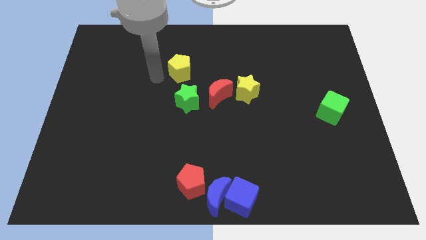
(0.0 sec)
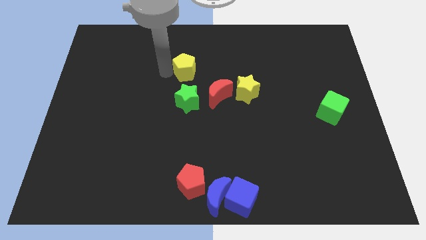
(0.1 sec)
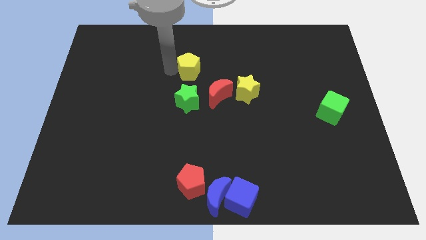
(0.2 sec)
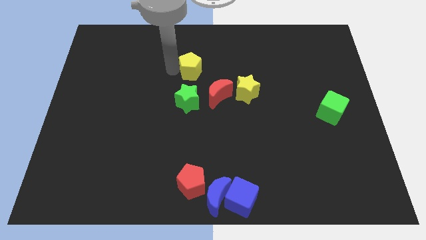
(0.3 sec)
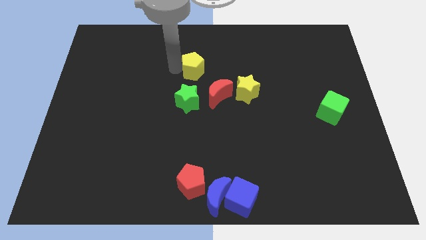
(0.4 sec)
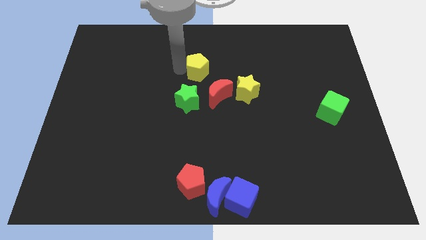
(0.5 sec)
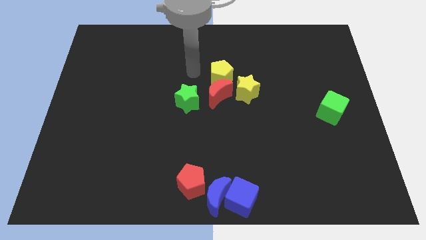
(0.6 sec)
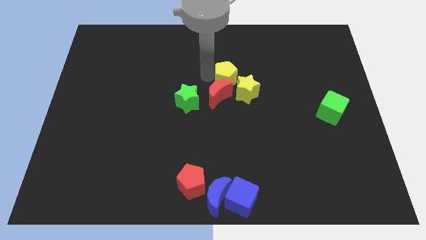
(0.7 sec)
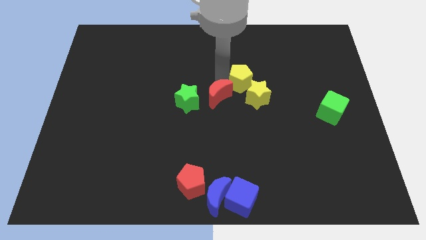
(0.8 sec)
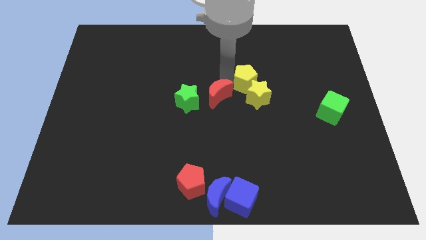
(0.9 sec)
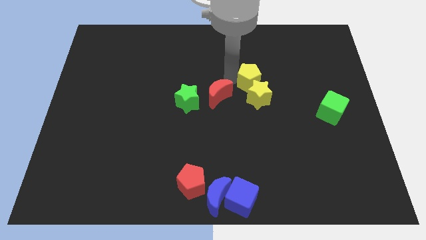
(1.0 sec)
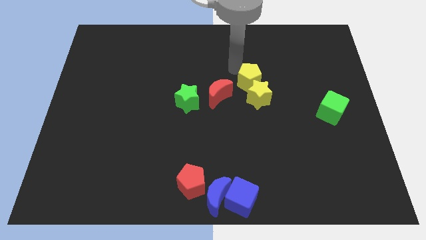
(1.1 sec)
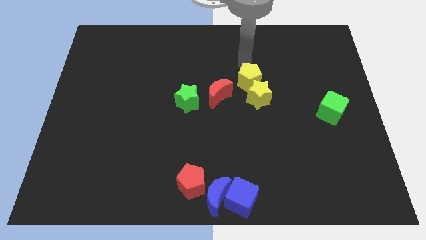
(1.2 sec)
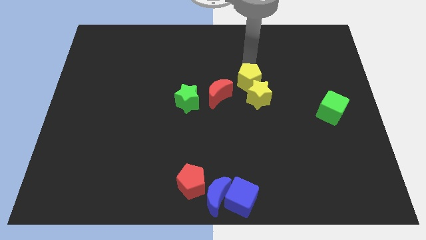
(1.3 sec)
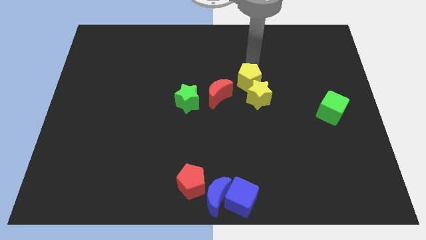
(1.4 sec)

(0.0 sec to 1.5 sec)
move the yellow pentagon into the yellow star

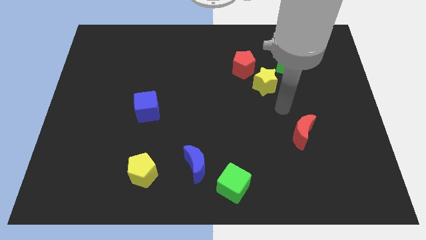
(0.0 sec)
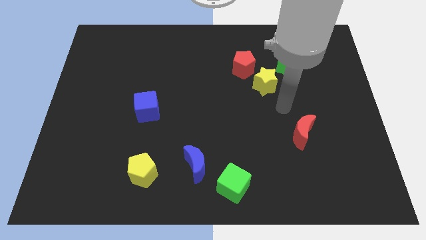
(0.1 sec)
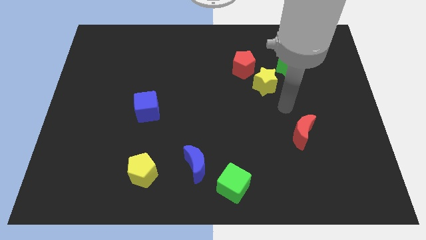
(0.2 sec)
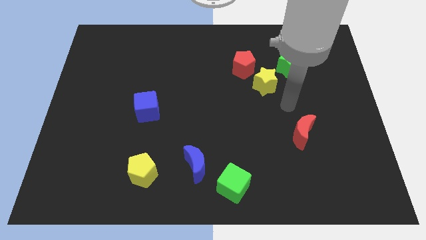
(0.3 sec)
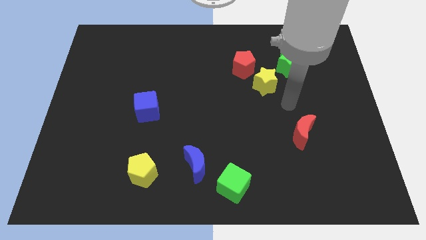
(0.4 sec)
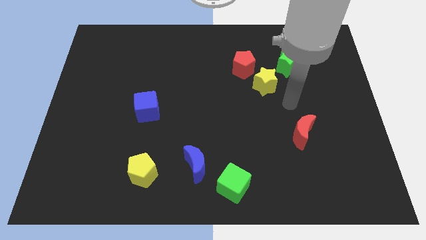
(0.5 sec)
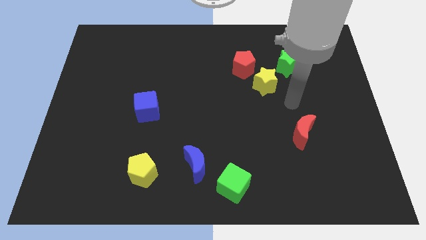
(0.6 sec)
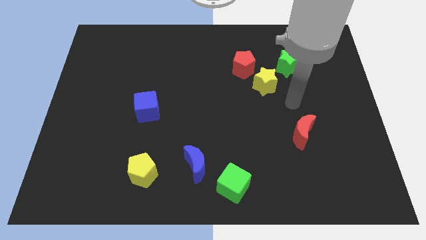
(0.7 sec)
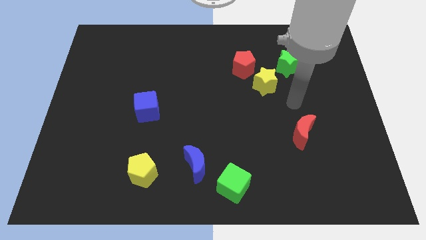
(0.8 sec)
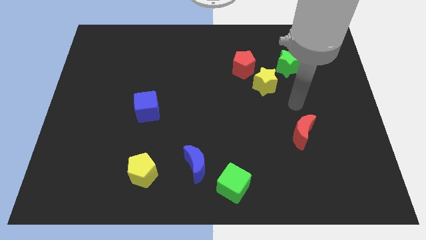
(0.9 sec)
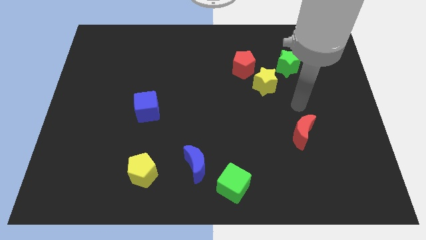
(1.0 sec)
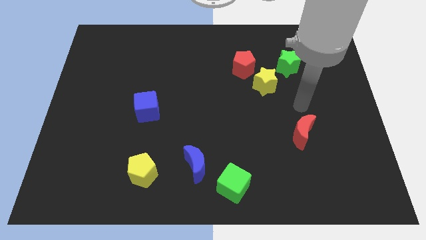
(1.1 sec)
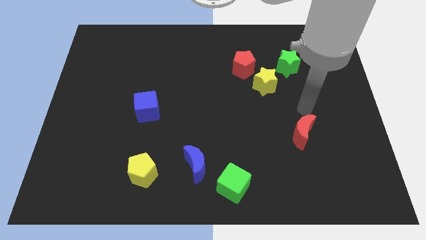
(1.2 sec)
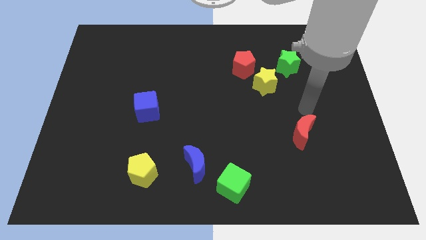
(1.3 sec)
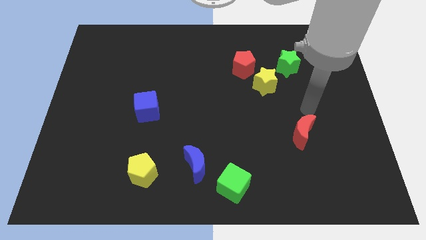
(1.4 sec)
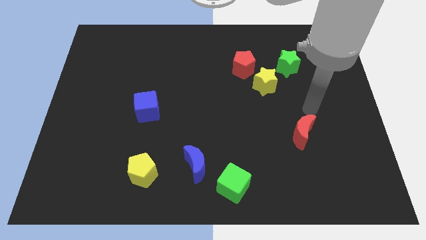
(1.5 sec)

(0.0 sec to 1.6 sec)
point your hand at the top side of the red moon

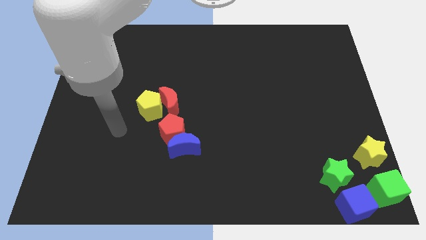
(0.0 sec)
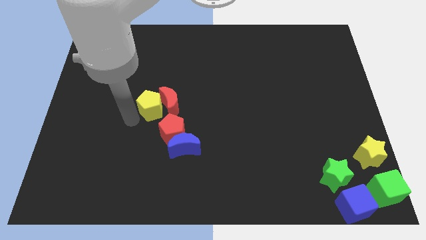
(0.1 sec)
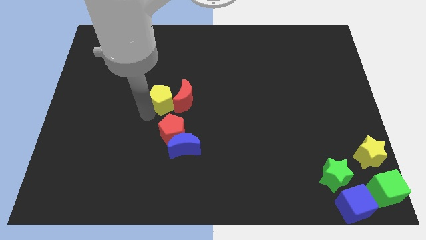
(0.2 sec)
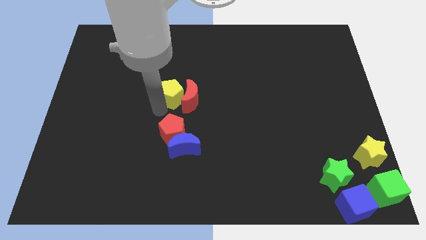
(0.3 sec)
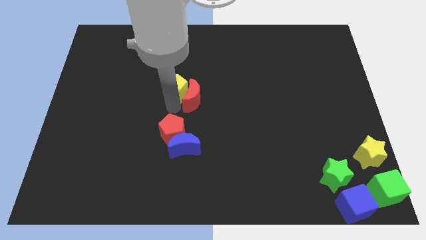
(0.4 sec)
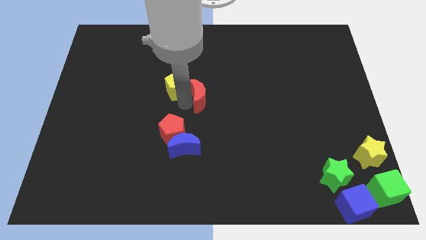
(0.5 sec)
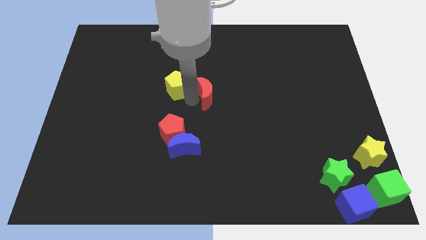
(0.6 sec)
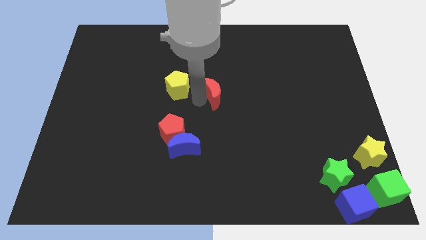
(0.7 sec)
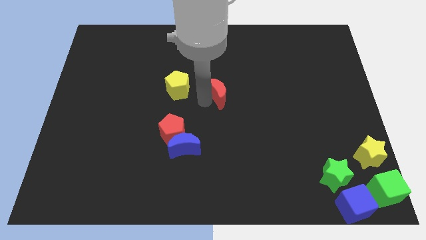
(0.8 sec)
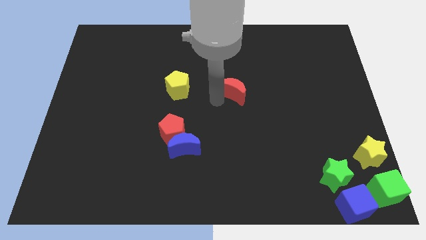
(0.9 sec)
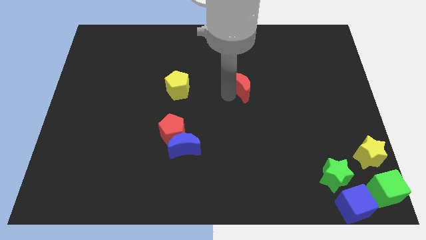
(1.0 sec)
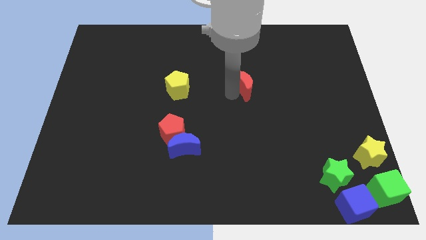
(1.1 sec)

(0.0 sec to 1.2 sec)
move the red crescent towards the center of the board

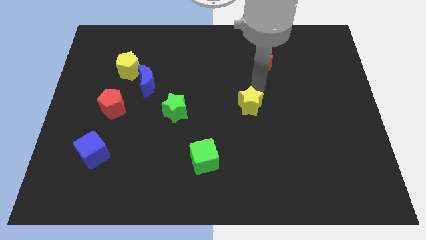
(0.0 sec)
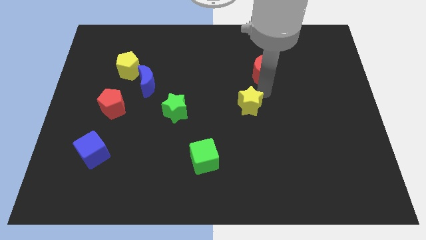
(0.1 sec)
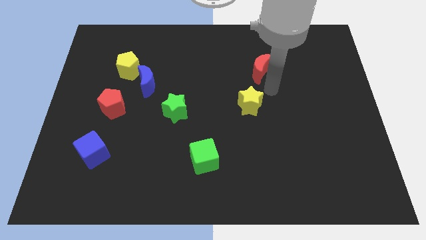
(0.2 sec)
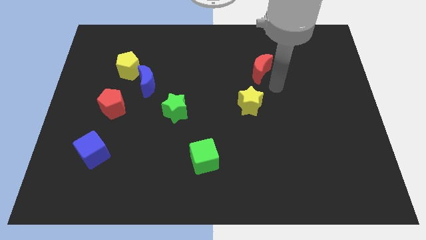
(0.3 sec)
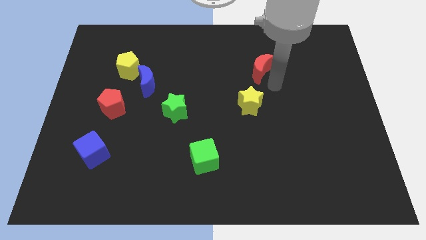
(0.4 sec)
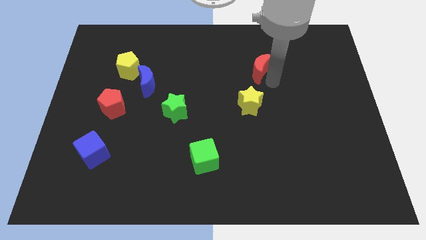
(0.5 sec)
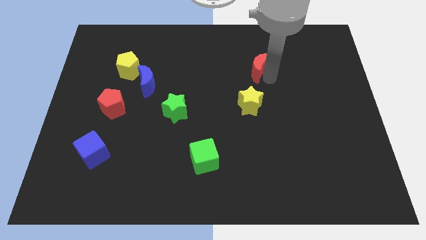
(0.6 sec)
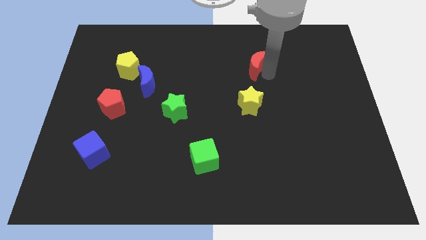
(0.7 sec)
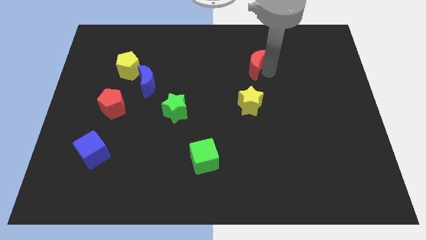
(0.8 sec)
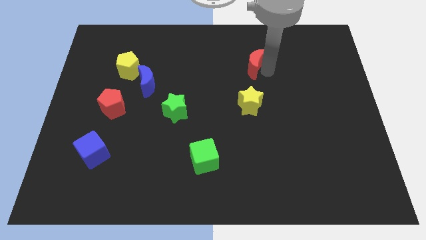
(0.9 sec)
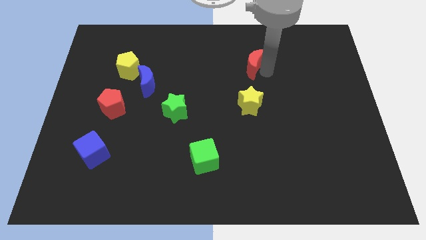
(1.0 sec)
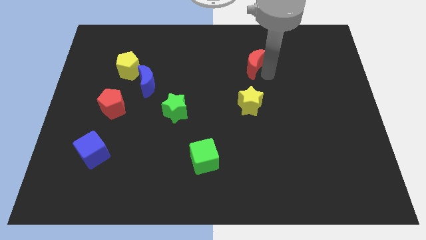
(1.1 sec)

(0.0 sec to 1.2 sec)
slightly push the red moon upward

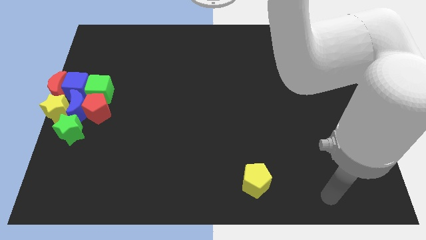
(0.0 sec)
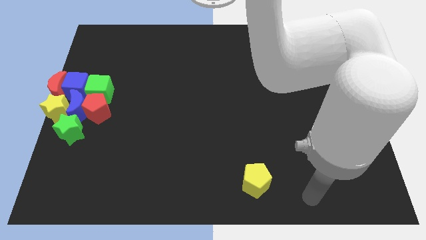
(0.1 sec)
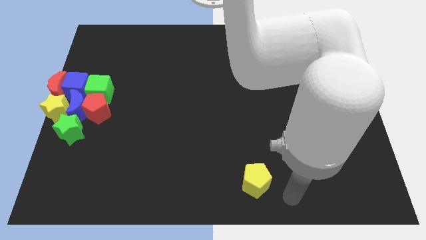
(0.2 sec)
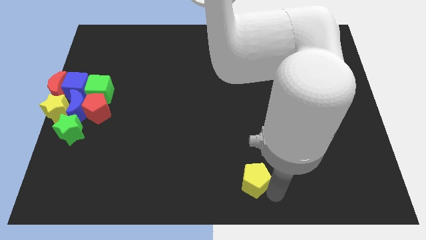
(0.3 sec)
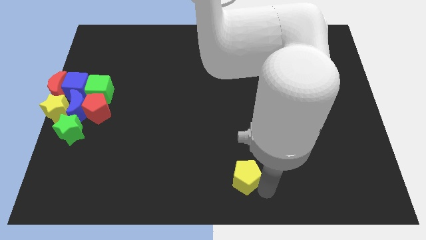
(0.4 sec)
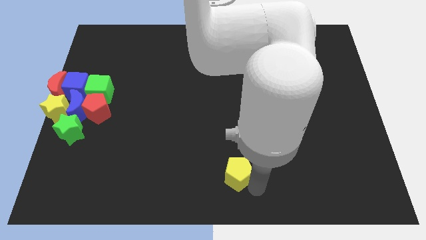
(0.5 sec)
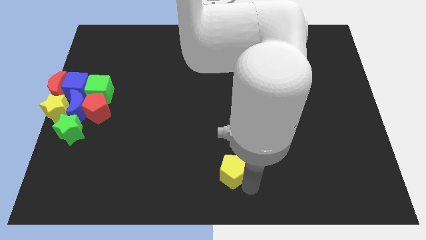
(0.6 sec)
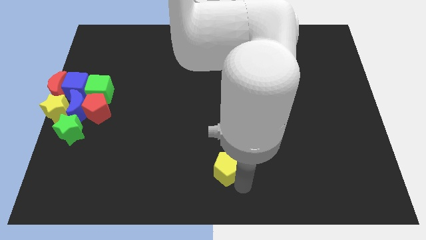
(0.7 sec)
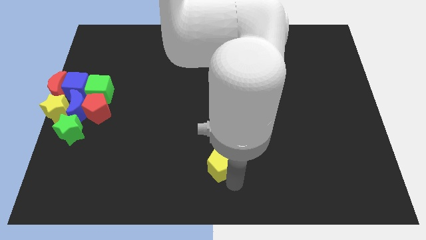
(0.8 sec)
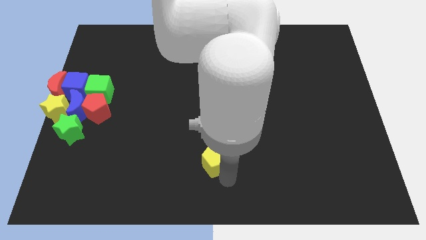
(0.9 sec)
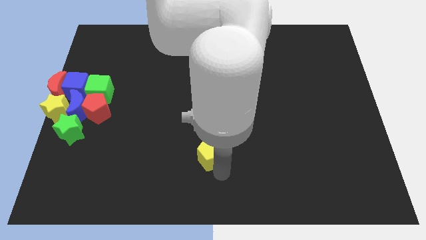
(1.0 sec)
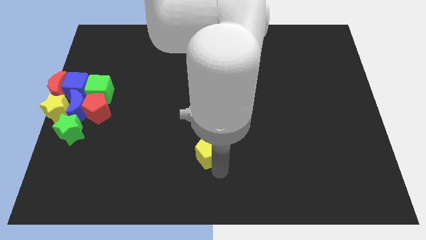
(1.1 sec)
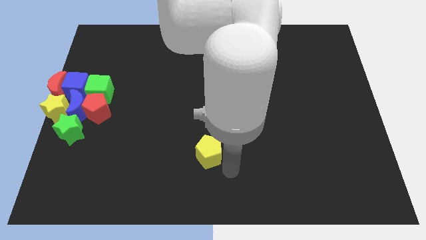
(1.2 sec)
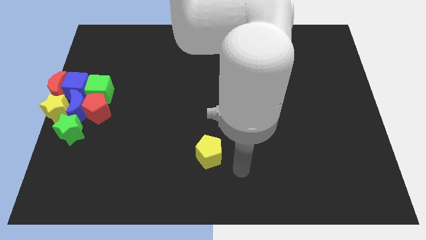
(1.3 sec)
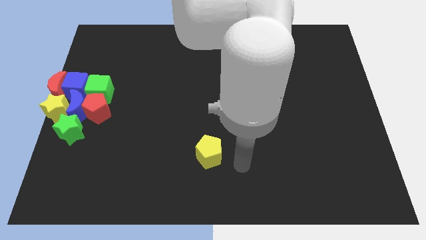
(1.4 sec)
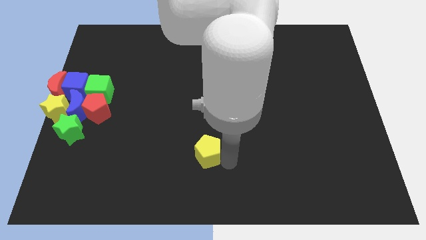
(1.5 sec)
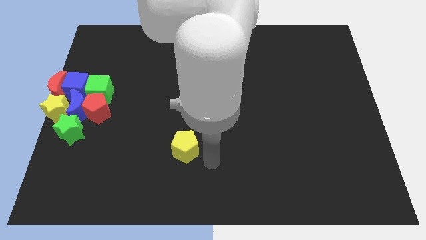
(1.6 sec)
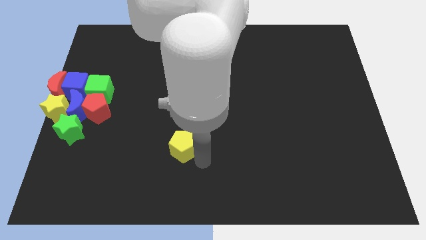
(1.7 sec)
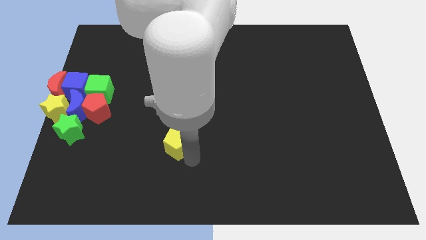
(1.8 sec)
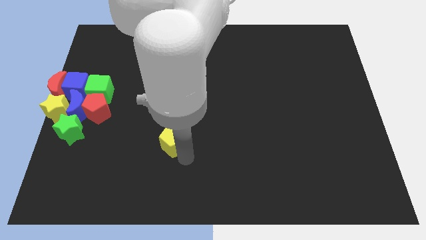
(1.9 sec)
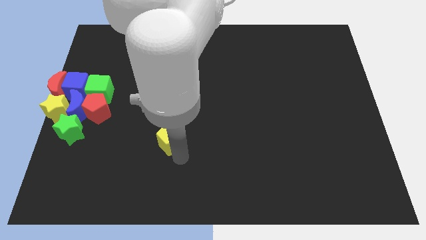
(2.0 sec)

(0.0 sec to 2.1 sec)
slide yellow pentagon to the right of green star

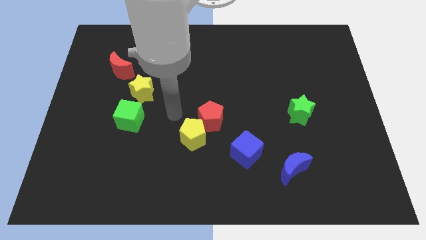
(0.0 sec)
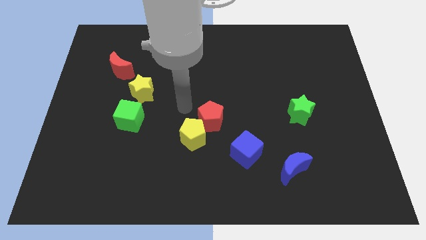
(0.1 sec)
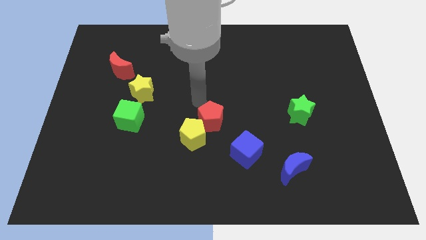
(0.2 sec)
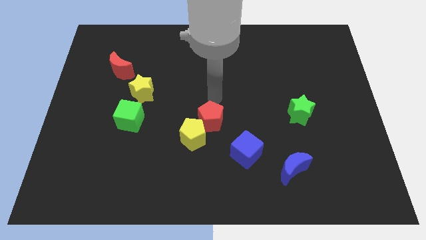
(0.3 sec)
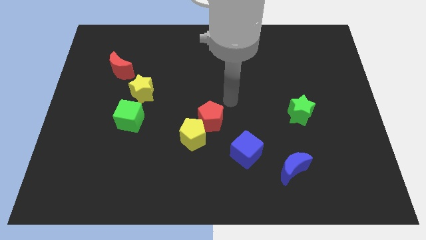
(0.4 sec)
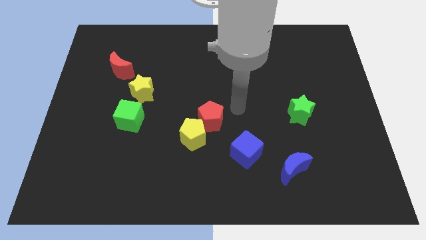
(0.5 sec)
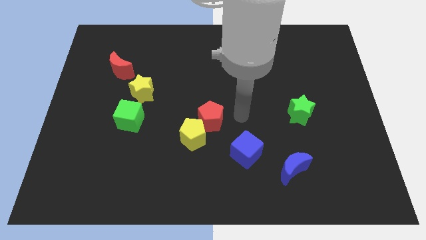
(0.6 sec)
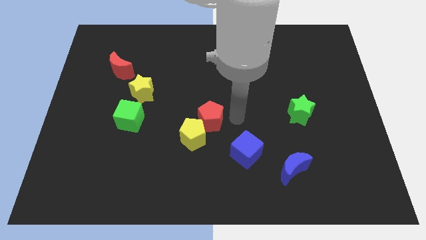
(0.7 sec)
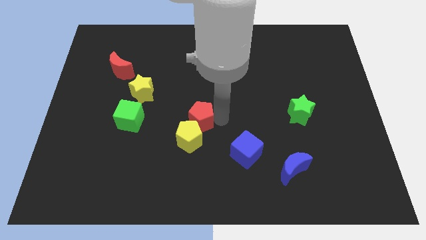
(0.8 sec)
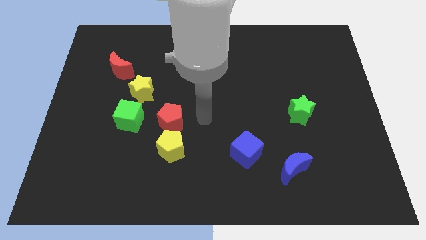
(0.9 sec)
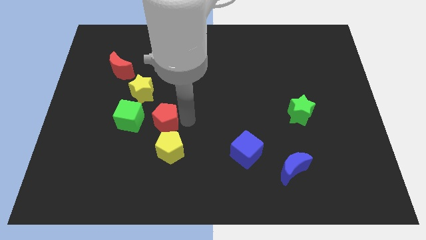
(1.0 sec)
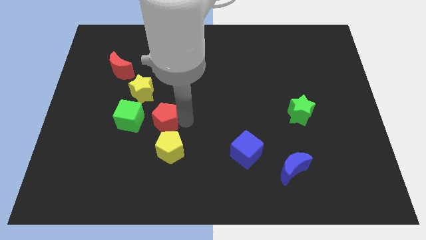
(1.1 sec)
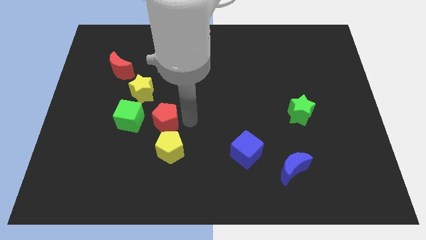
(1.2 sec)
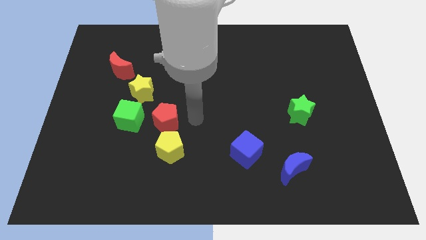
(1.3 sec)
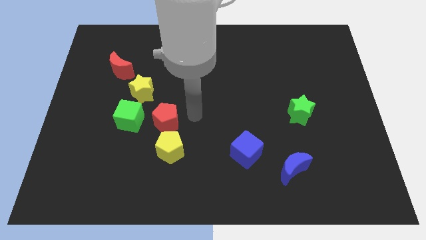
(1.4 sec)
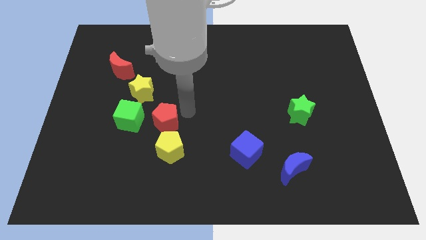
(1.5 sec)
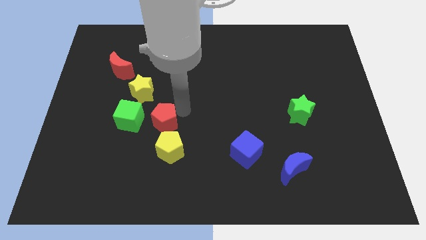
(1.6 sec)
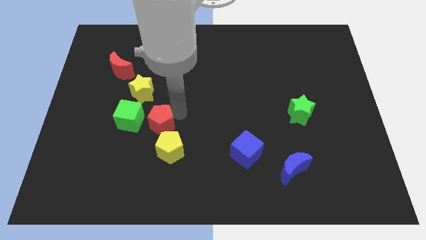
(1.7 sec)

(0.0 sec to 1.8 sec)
push the red pentagon close to the green cube
